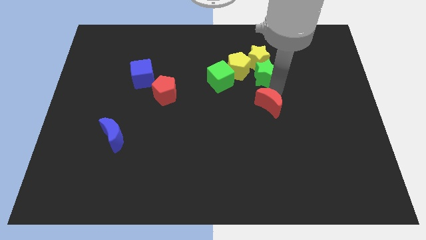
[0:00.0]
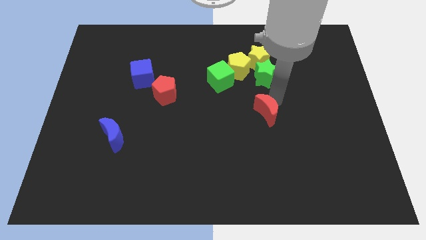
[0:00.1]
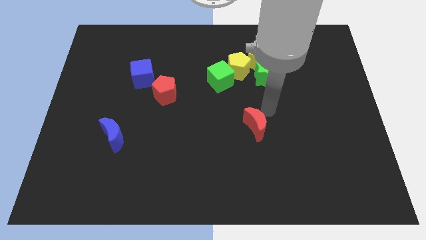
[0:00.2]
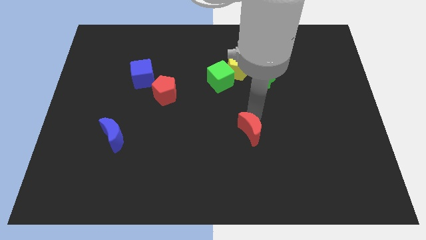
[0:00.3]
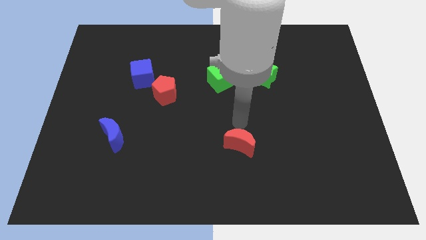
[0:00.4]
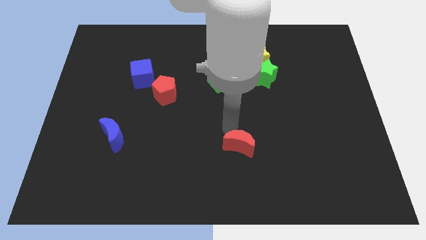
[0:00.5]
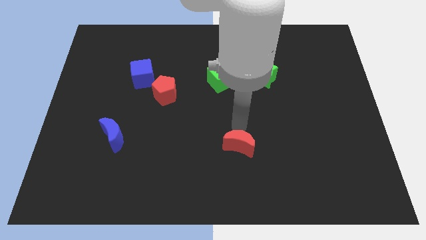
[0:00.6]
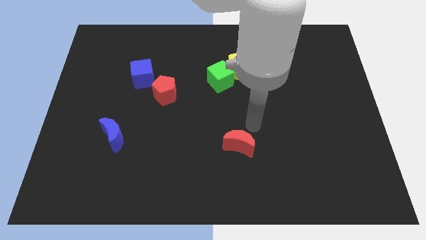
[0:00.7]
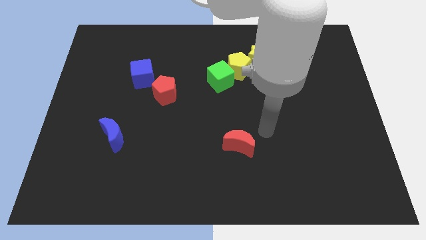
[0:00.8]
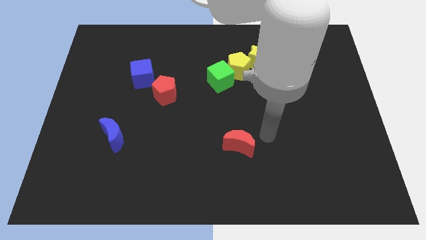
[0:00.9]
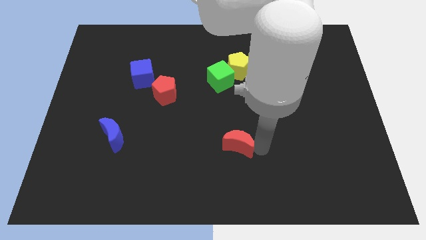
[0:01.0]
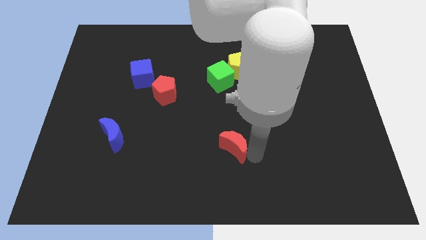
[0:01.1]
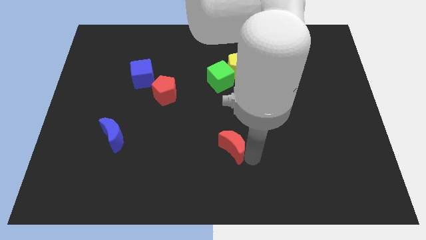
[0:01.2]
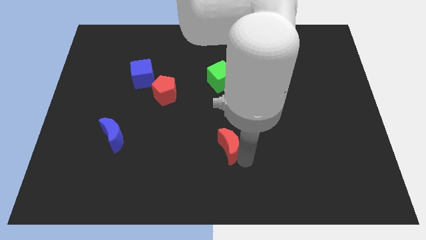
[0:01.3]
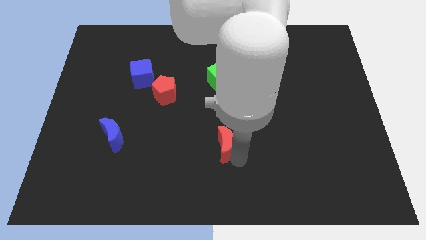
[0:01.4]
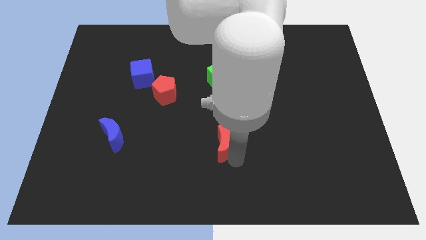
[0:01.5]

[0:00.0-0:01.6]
place the red crescent vertically below the green cube

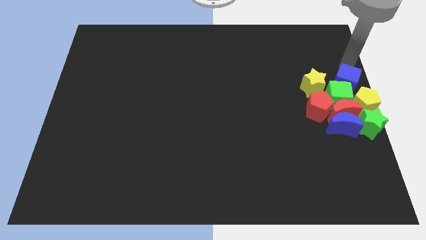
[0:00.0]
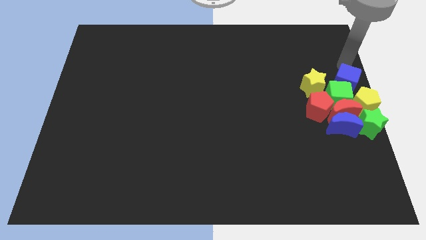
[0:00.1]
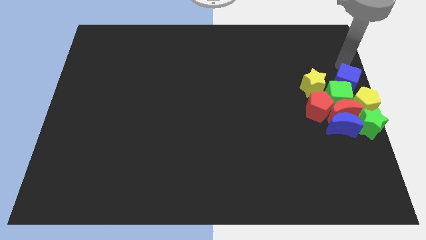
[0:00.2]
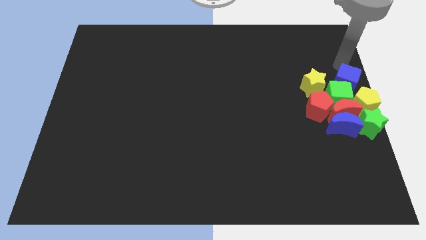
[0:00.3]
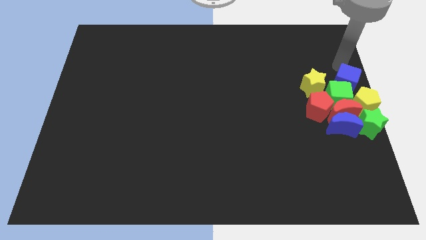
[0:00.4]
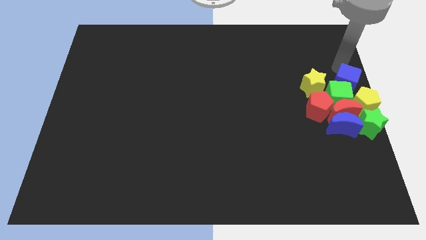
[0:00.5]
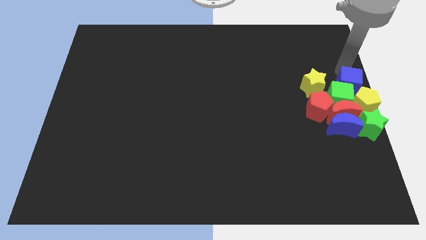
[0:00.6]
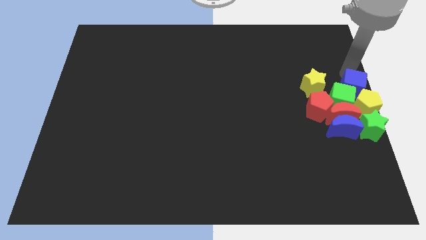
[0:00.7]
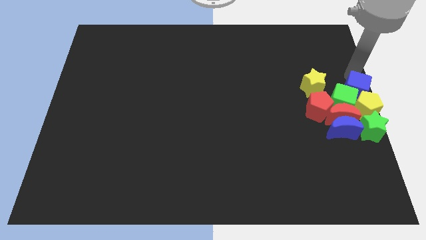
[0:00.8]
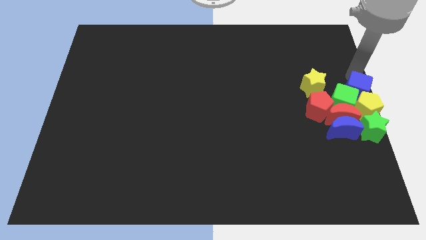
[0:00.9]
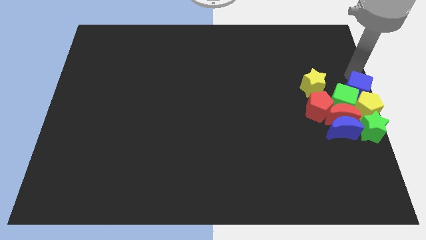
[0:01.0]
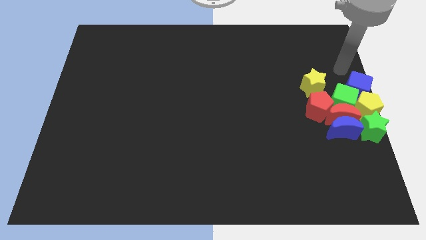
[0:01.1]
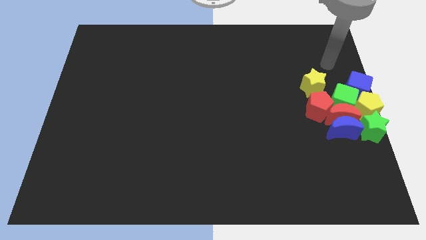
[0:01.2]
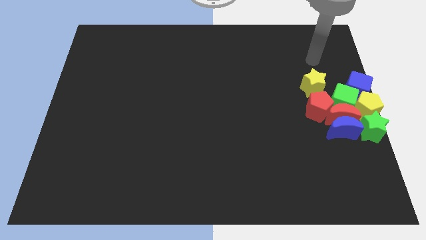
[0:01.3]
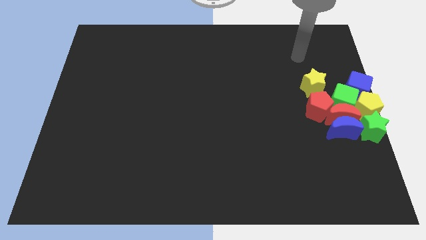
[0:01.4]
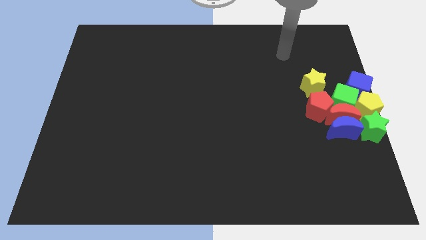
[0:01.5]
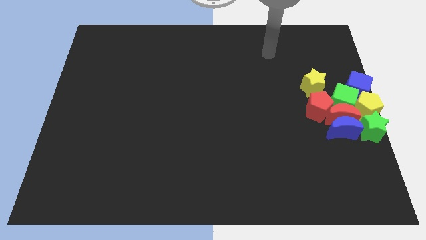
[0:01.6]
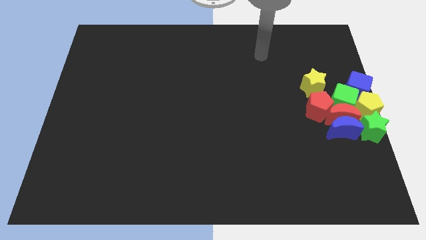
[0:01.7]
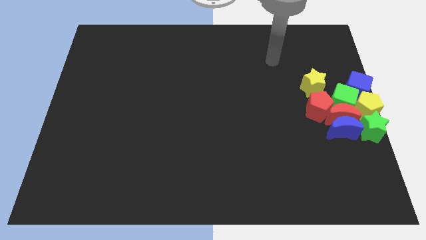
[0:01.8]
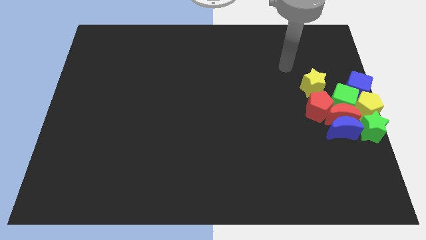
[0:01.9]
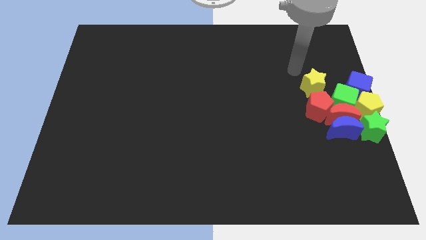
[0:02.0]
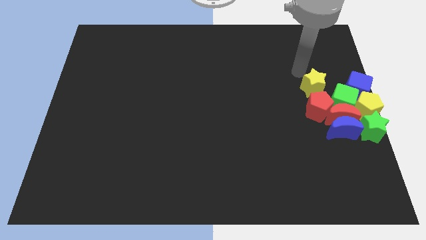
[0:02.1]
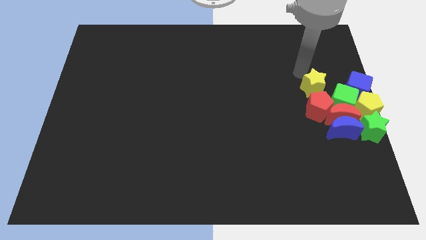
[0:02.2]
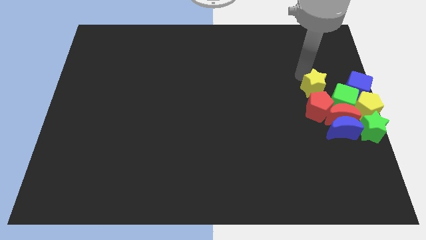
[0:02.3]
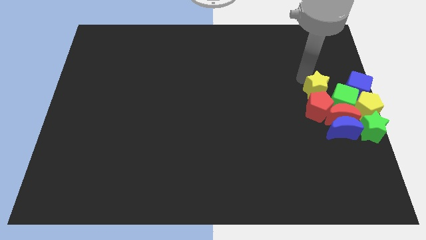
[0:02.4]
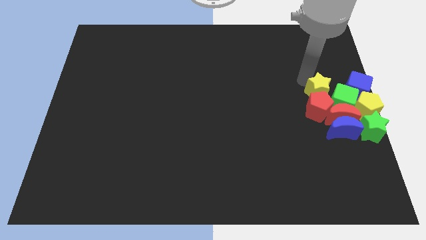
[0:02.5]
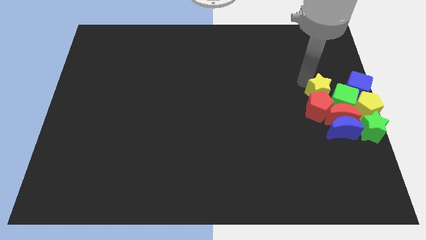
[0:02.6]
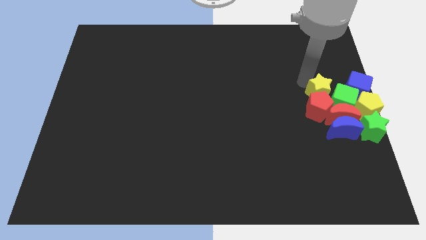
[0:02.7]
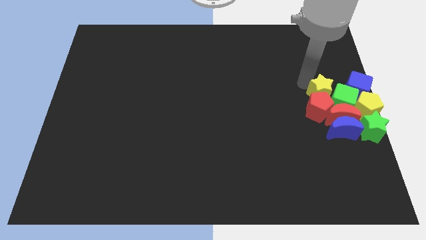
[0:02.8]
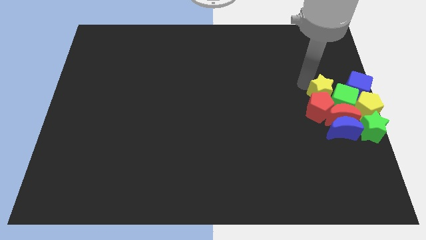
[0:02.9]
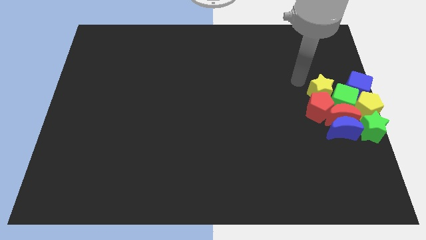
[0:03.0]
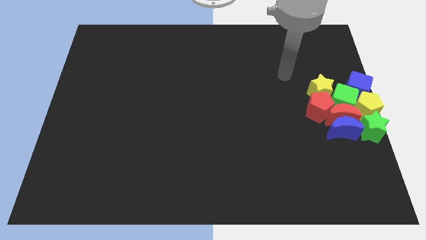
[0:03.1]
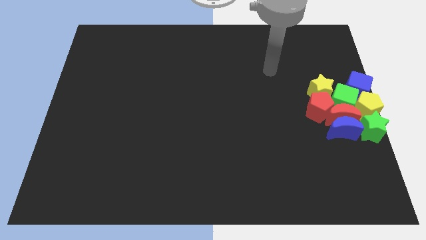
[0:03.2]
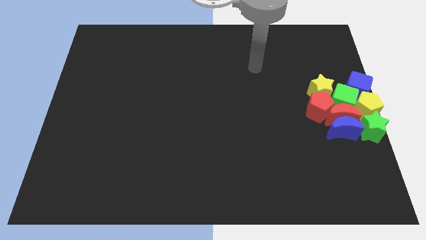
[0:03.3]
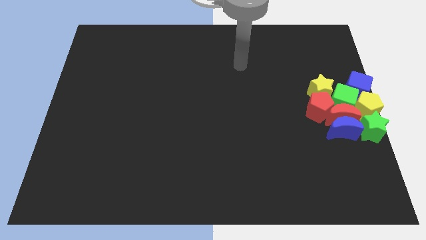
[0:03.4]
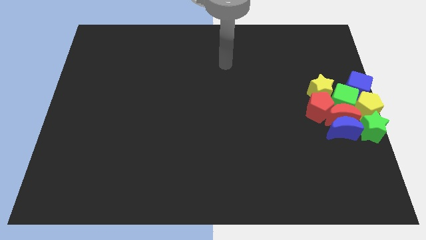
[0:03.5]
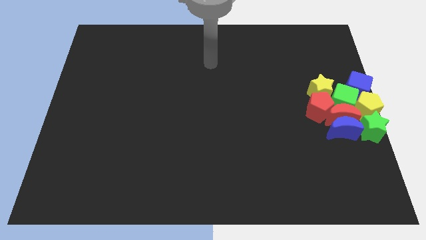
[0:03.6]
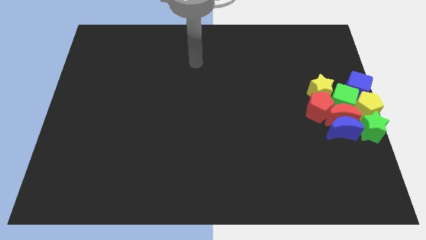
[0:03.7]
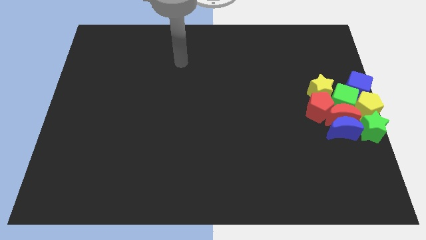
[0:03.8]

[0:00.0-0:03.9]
place the yellow star into the red pentagon

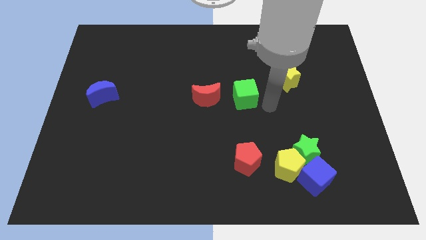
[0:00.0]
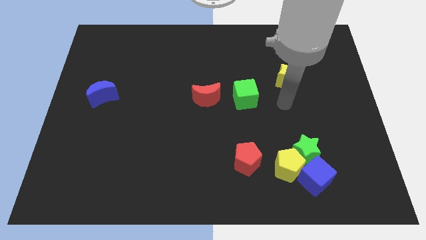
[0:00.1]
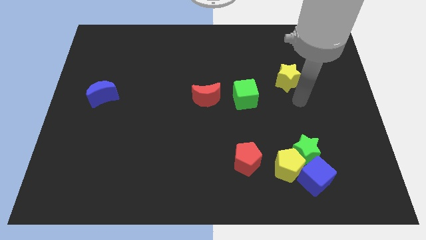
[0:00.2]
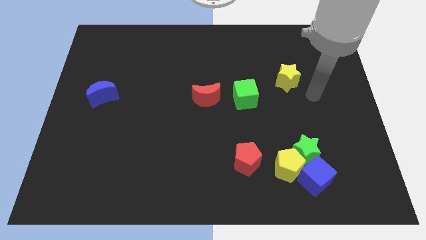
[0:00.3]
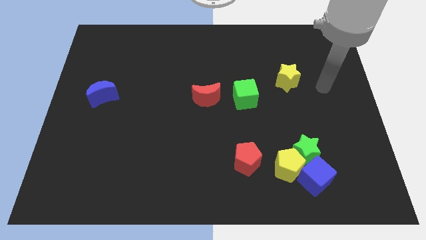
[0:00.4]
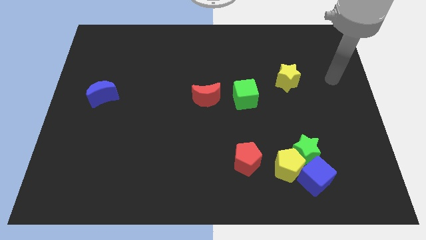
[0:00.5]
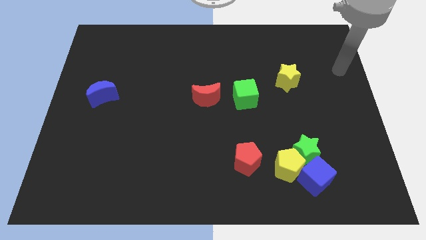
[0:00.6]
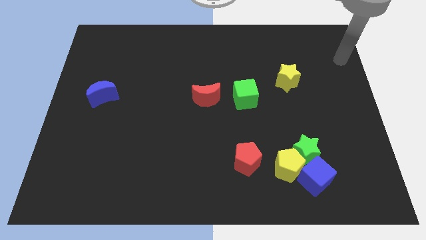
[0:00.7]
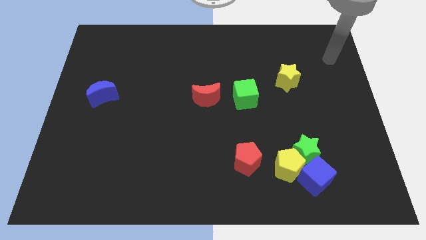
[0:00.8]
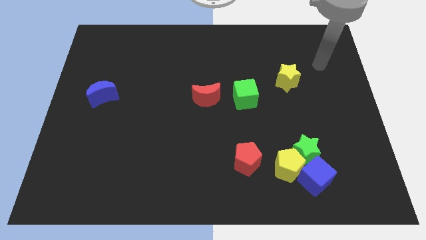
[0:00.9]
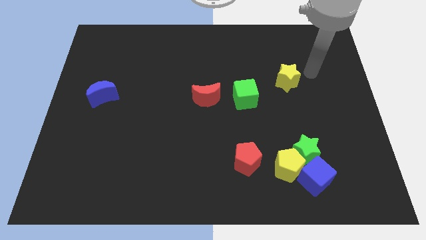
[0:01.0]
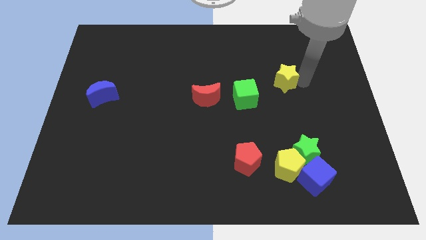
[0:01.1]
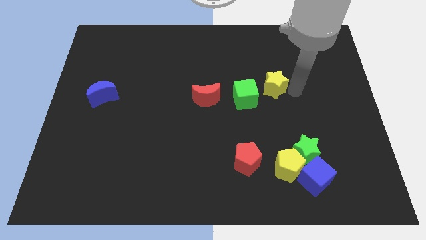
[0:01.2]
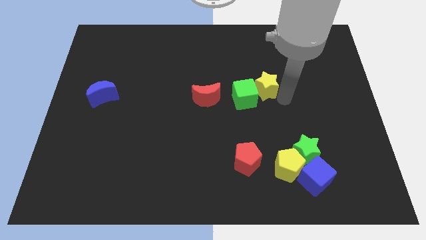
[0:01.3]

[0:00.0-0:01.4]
place yellow star above yellow pentagon

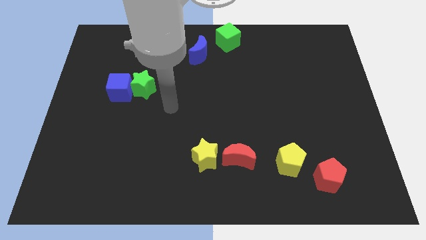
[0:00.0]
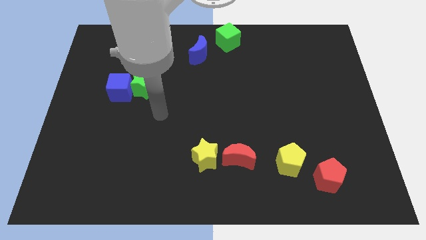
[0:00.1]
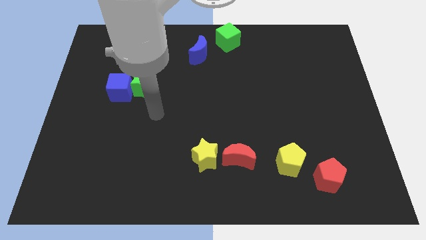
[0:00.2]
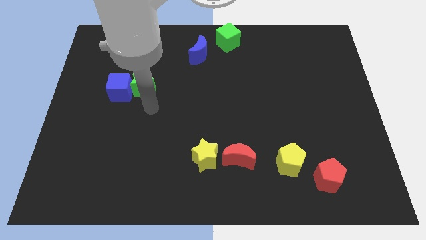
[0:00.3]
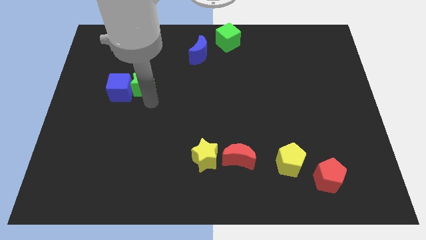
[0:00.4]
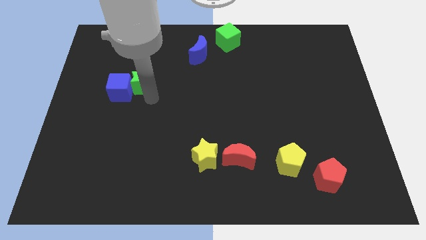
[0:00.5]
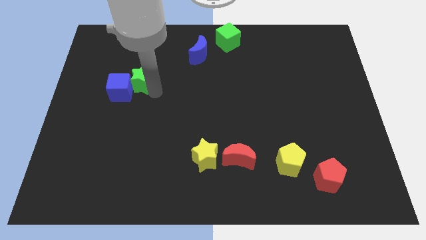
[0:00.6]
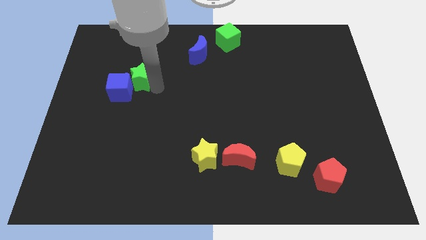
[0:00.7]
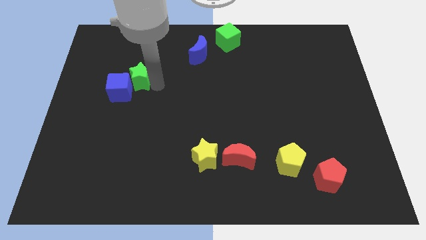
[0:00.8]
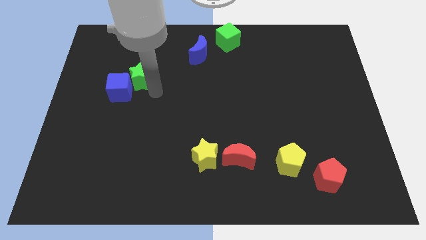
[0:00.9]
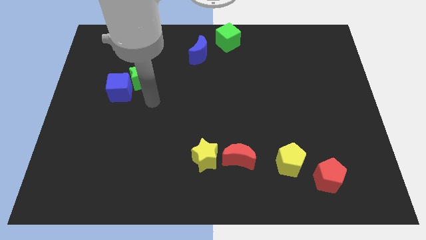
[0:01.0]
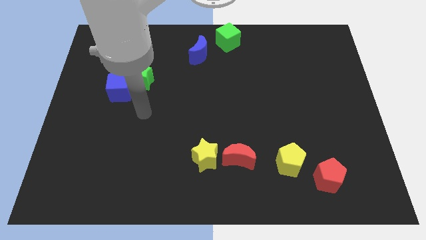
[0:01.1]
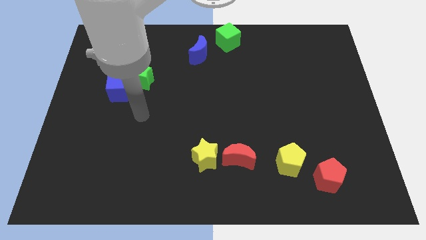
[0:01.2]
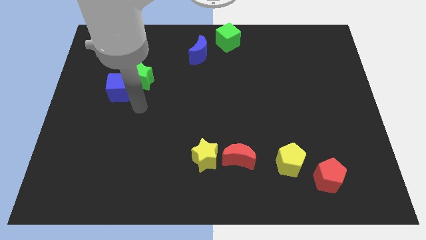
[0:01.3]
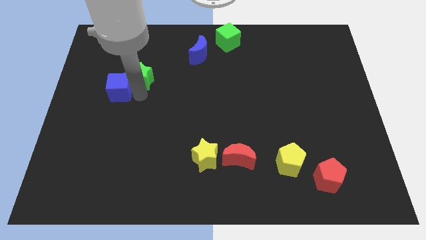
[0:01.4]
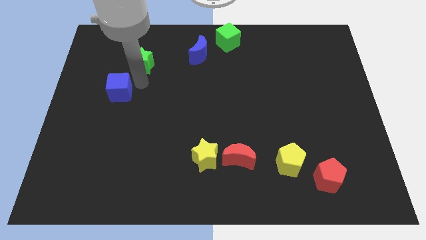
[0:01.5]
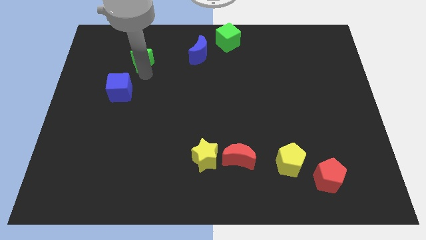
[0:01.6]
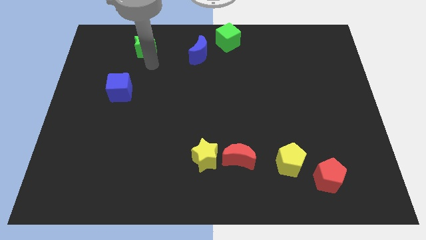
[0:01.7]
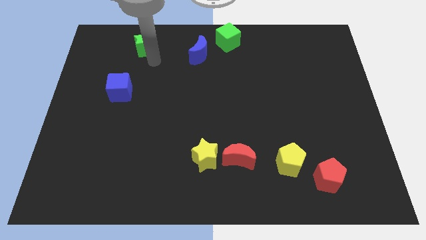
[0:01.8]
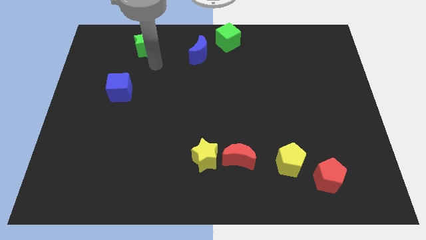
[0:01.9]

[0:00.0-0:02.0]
push the green star to the left side of the blue moon
